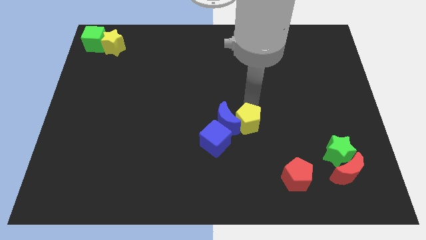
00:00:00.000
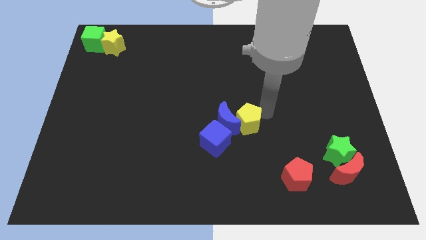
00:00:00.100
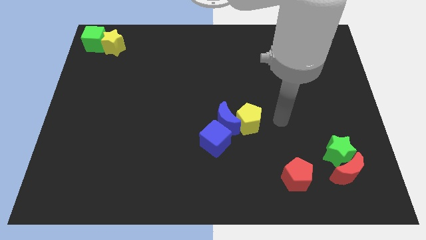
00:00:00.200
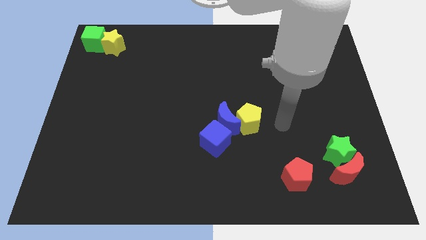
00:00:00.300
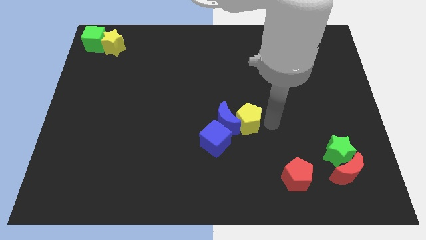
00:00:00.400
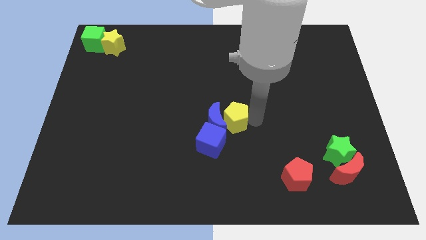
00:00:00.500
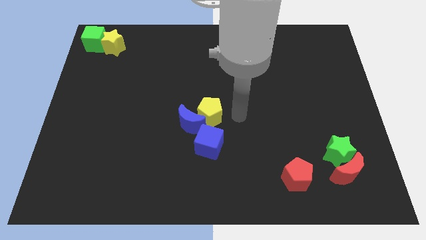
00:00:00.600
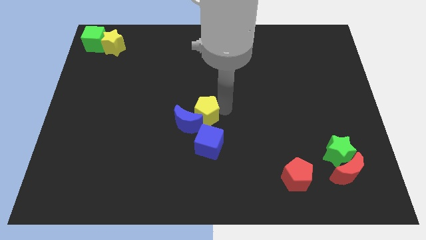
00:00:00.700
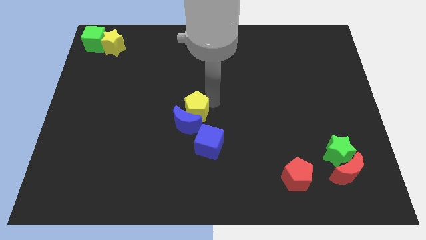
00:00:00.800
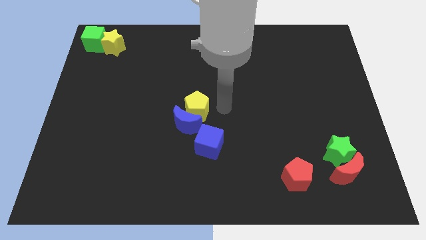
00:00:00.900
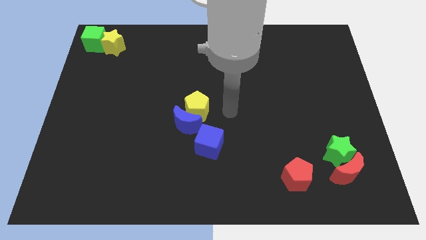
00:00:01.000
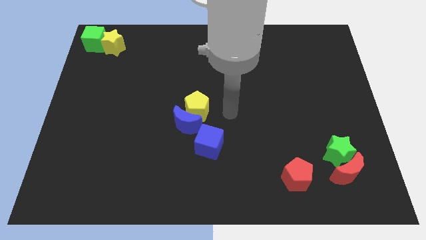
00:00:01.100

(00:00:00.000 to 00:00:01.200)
move the yellow pentagon to the center of the board

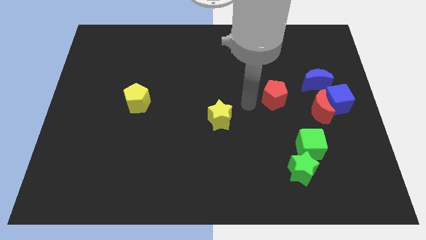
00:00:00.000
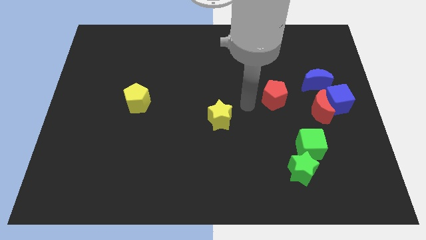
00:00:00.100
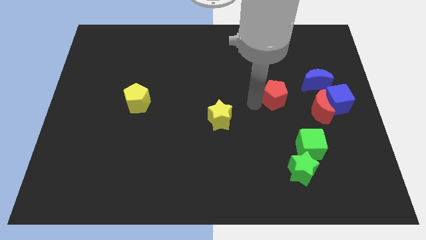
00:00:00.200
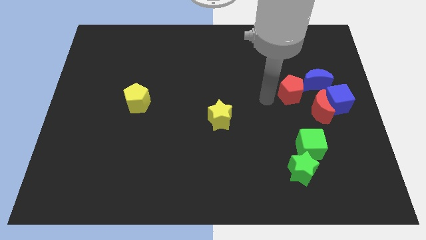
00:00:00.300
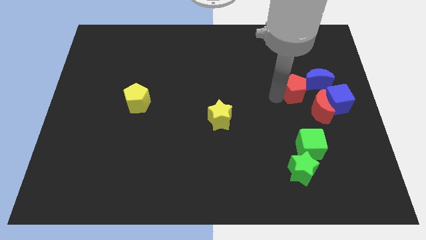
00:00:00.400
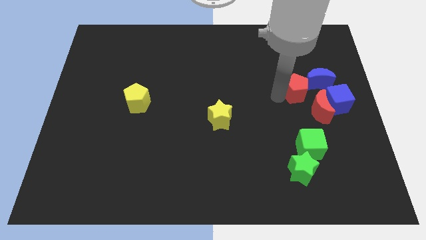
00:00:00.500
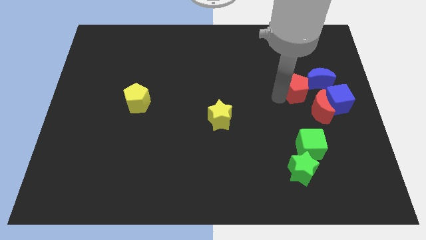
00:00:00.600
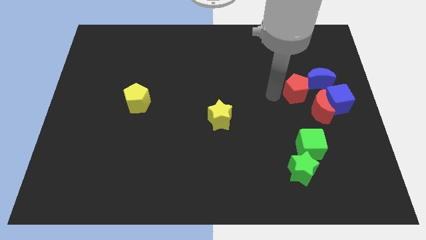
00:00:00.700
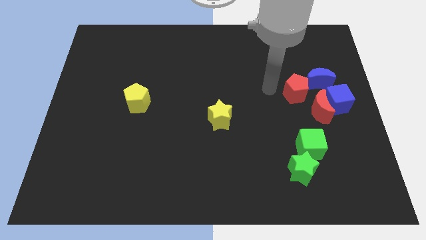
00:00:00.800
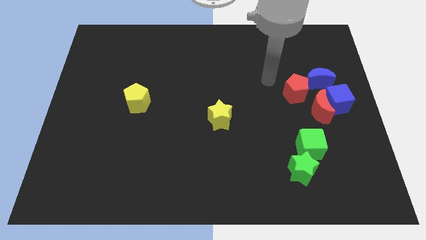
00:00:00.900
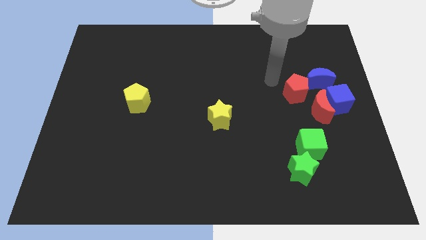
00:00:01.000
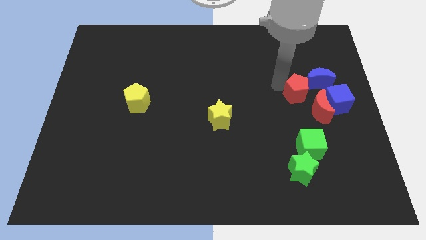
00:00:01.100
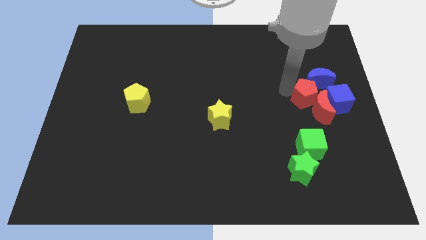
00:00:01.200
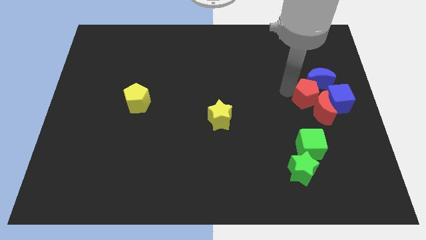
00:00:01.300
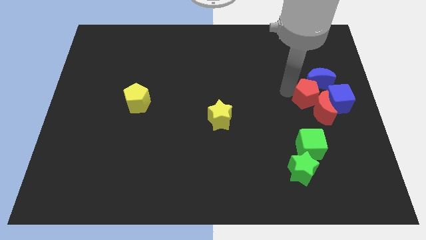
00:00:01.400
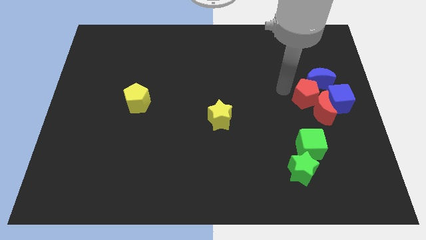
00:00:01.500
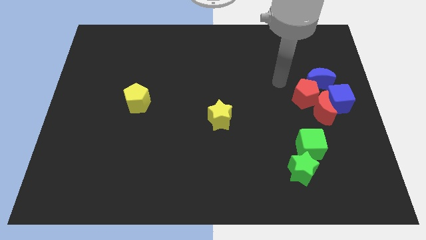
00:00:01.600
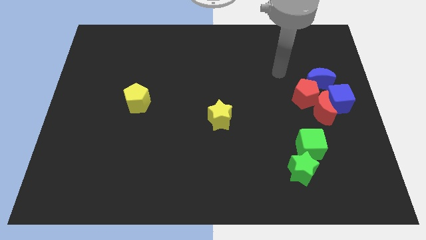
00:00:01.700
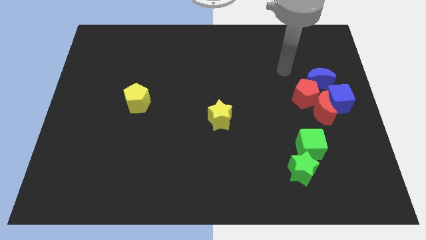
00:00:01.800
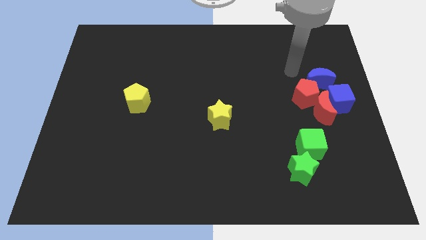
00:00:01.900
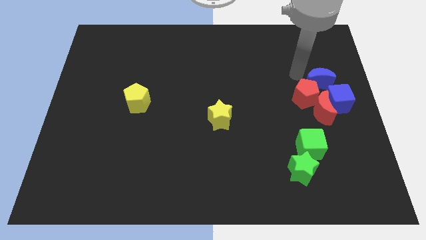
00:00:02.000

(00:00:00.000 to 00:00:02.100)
push red pentagon into the blue crescent

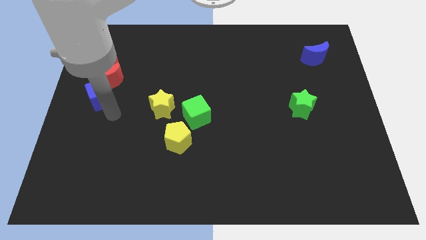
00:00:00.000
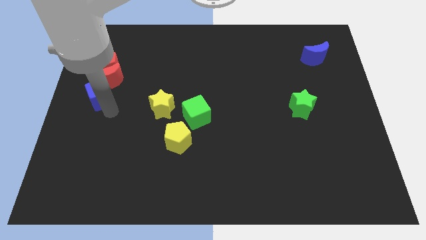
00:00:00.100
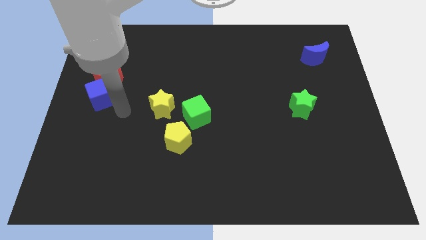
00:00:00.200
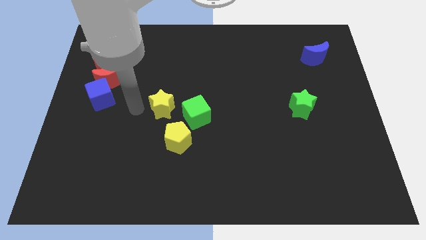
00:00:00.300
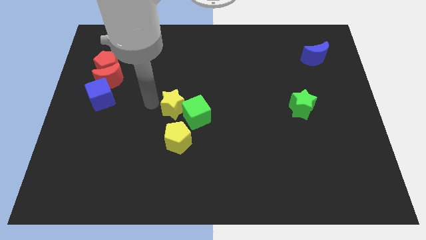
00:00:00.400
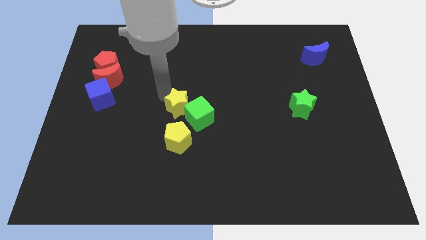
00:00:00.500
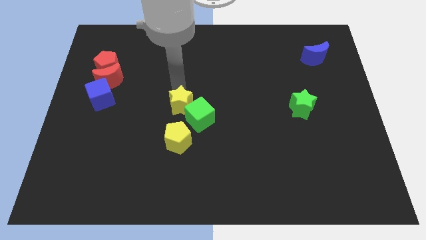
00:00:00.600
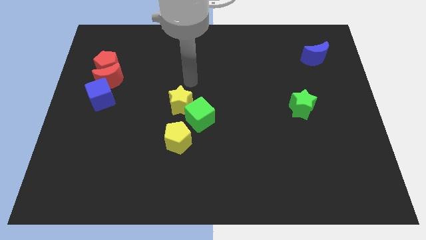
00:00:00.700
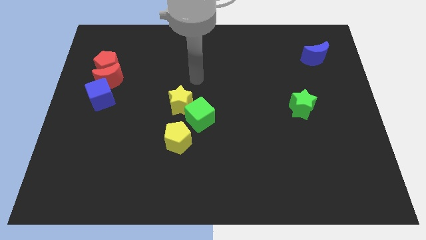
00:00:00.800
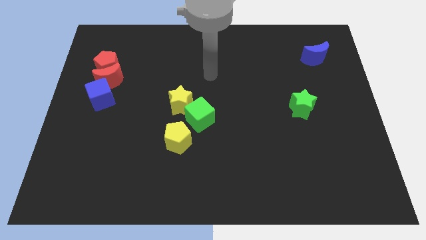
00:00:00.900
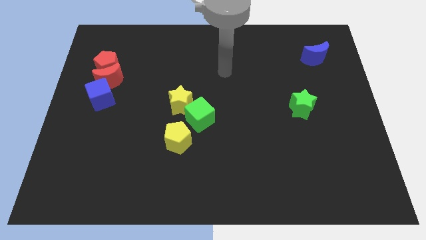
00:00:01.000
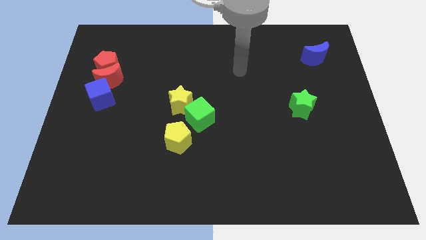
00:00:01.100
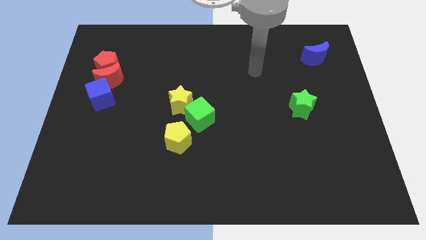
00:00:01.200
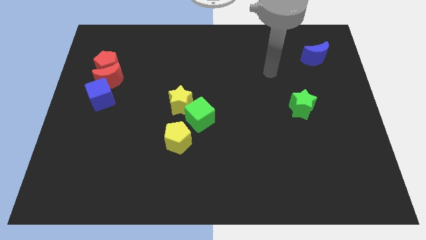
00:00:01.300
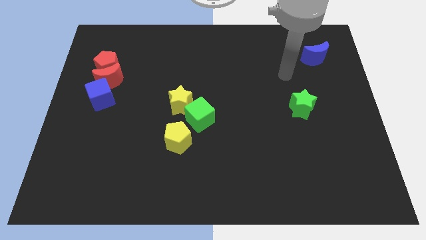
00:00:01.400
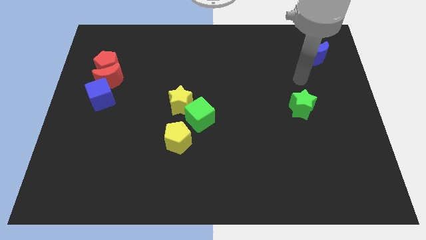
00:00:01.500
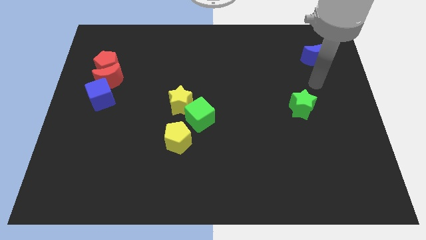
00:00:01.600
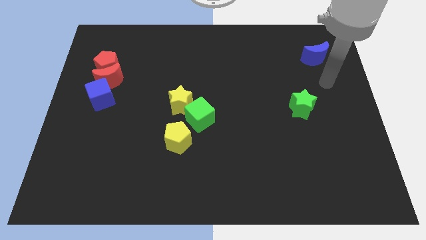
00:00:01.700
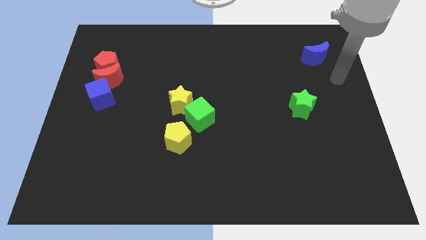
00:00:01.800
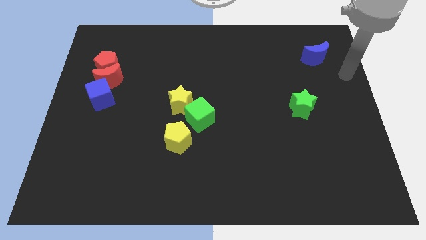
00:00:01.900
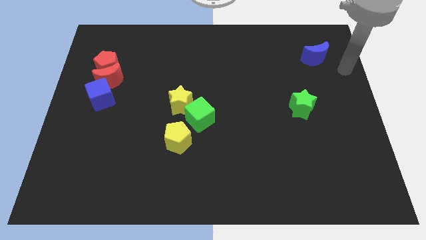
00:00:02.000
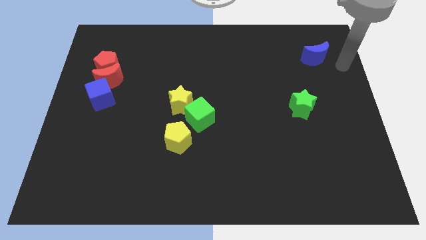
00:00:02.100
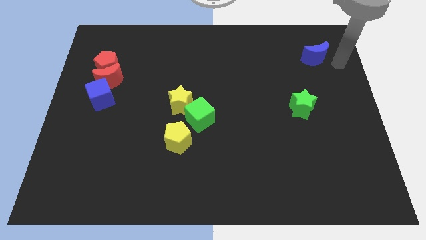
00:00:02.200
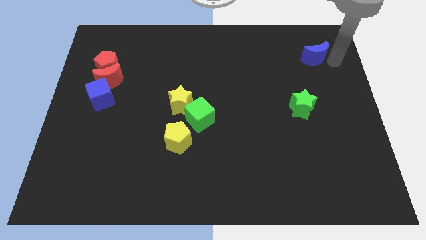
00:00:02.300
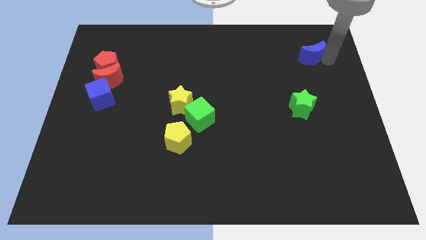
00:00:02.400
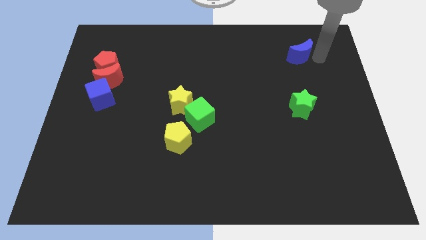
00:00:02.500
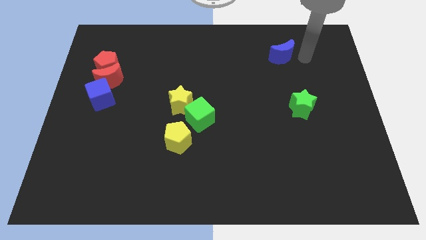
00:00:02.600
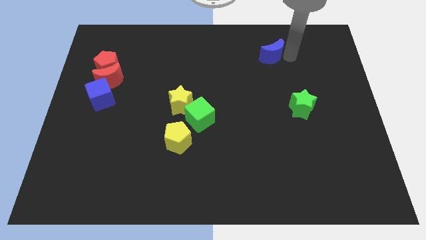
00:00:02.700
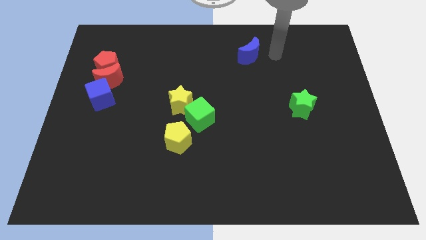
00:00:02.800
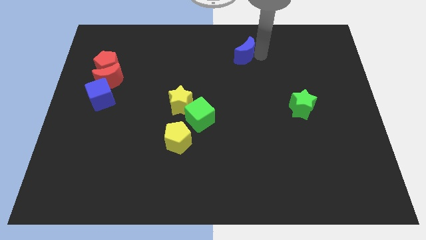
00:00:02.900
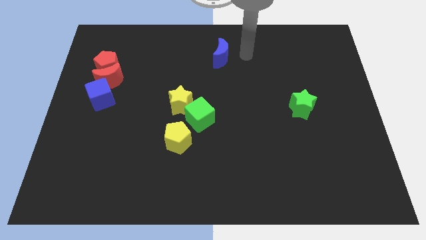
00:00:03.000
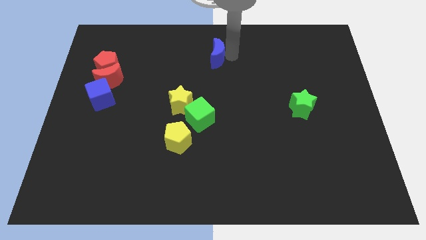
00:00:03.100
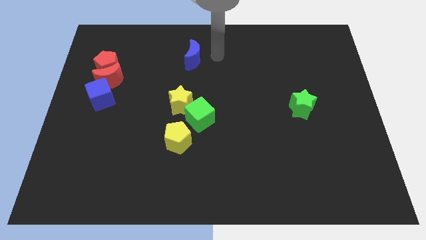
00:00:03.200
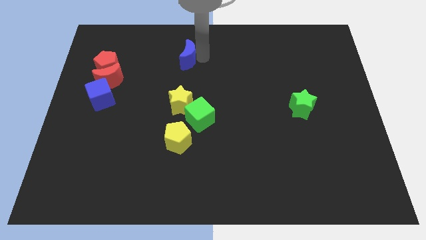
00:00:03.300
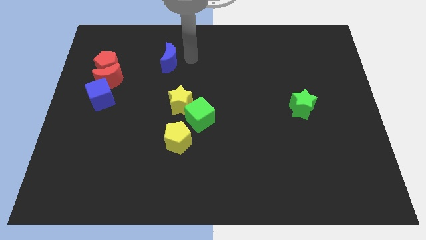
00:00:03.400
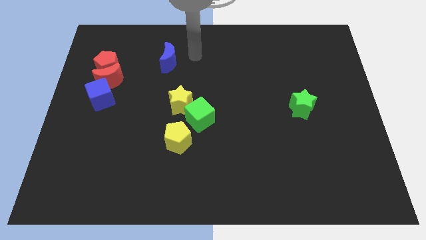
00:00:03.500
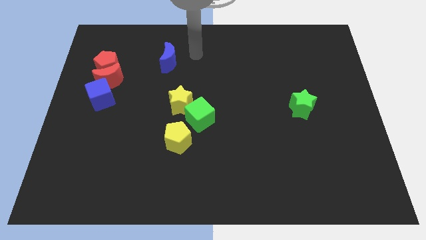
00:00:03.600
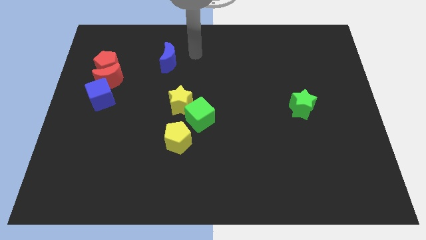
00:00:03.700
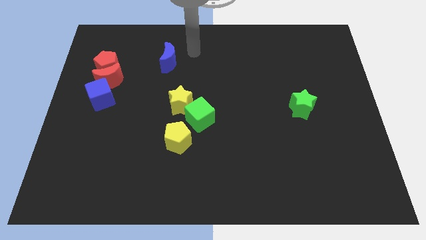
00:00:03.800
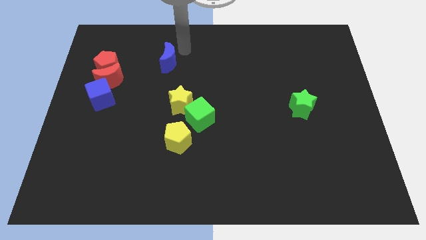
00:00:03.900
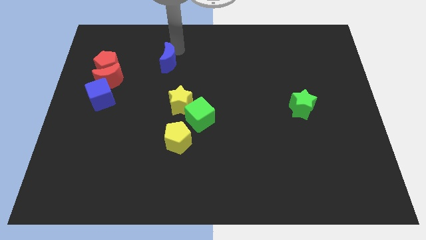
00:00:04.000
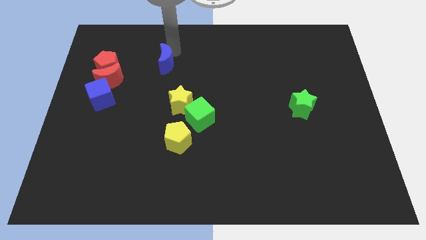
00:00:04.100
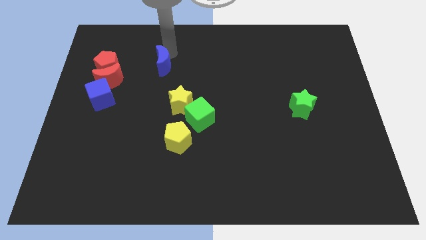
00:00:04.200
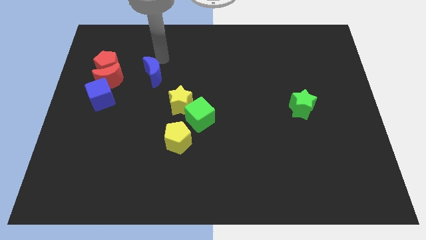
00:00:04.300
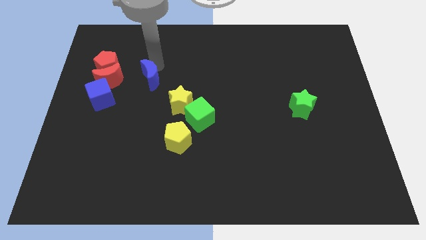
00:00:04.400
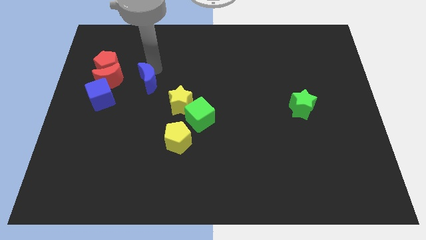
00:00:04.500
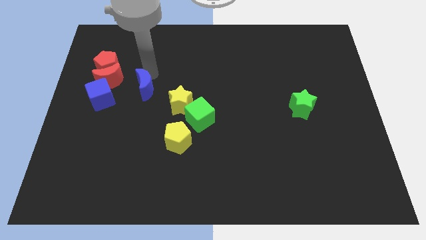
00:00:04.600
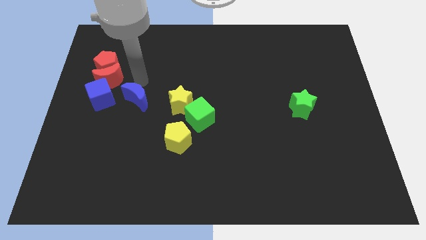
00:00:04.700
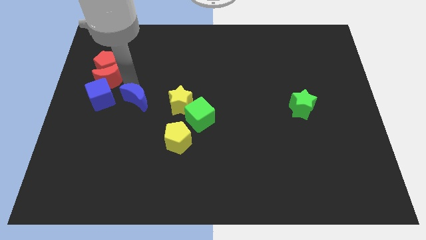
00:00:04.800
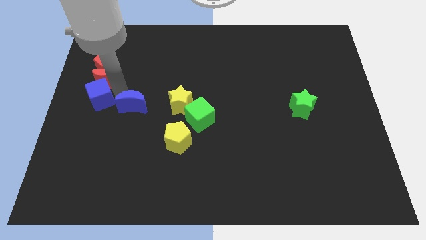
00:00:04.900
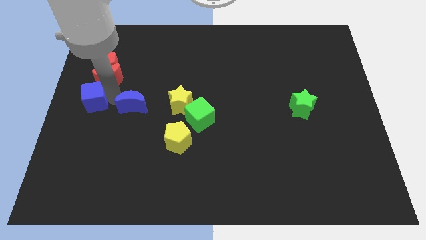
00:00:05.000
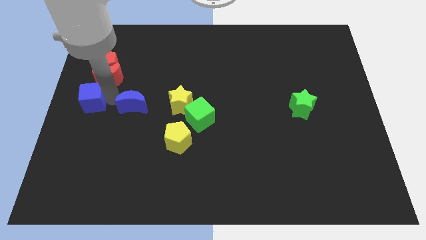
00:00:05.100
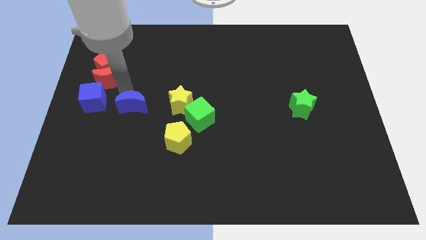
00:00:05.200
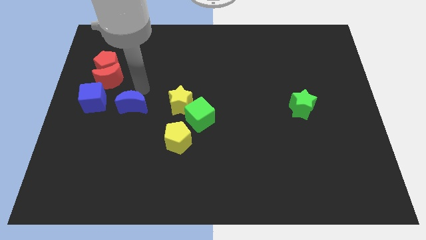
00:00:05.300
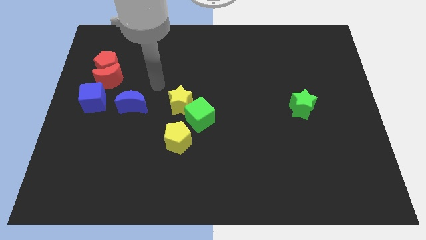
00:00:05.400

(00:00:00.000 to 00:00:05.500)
move the blue crescent in between the blue cube and yellow star

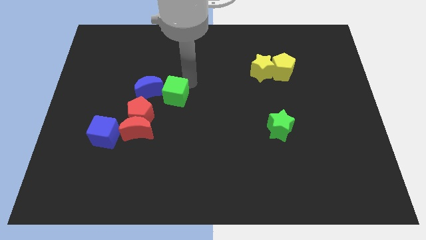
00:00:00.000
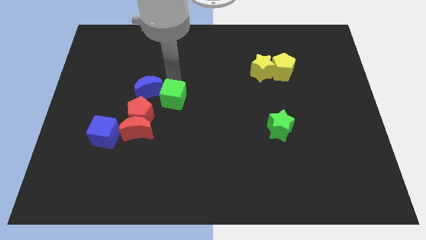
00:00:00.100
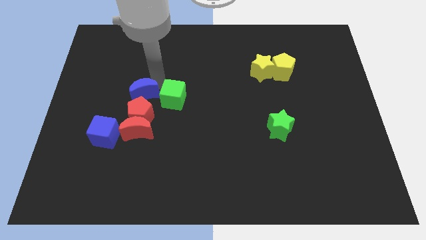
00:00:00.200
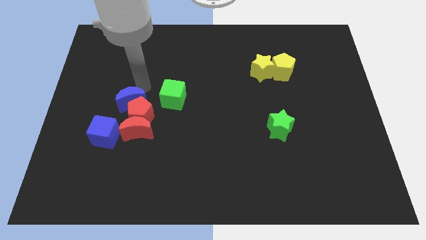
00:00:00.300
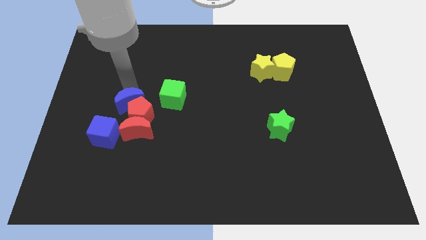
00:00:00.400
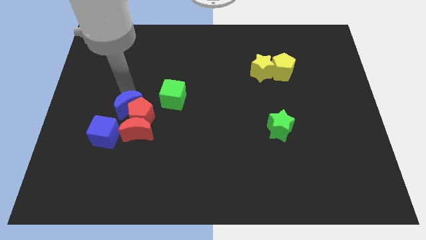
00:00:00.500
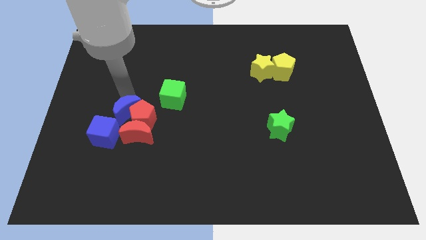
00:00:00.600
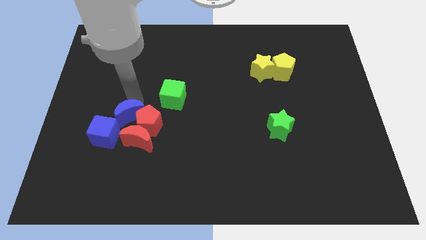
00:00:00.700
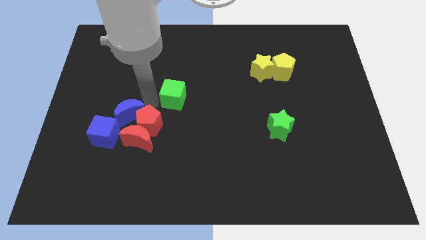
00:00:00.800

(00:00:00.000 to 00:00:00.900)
push the blue moon into a group of objects
